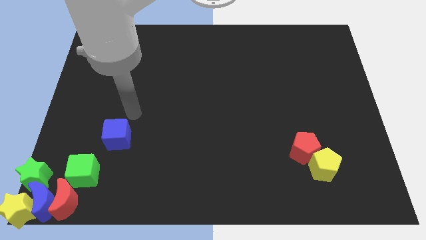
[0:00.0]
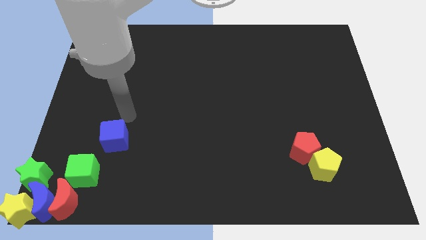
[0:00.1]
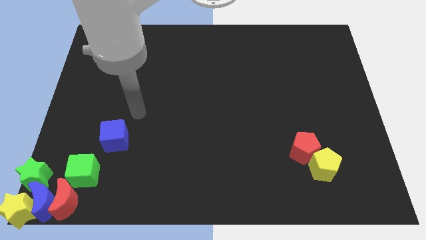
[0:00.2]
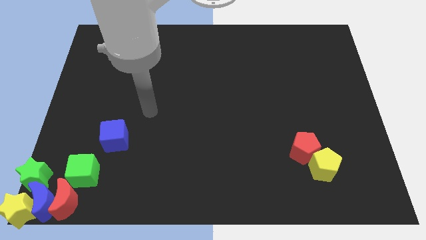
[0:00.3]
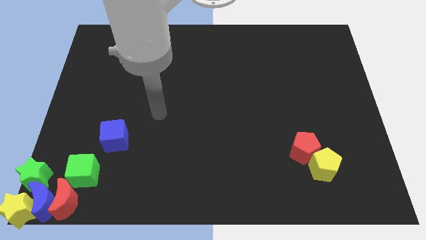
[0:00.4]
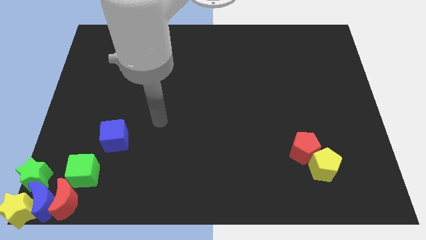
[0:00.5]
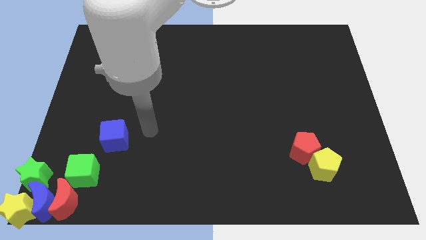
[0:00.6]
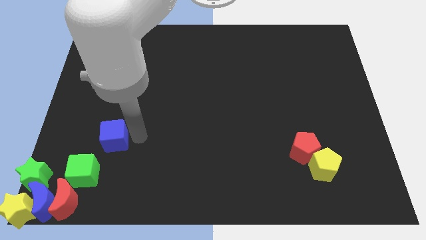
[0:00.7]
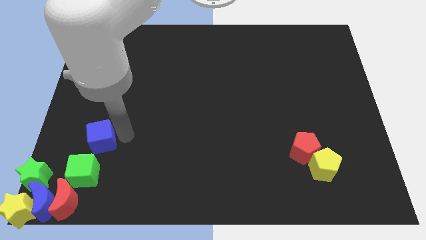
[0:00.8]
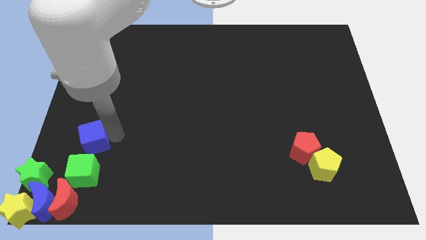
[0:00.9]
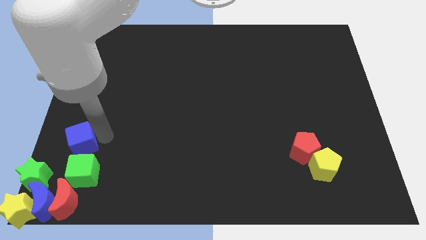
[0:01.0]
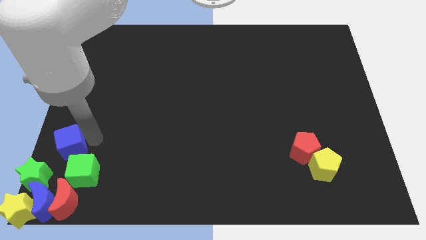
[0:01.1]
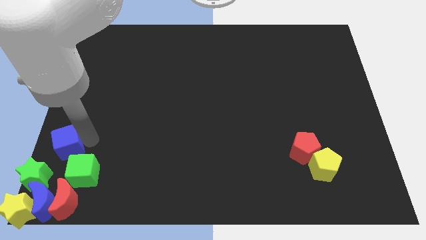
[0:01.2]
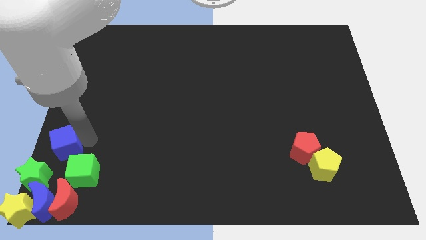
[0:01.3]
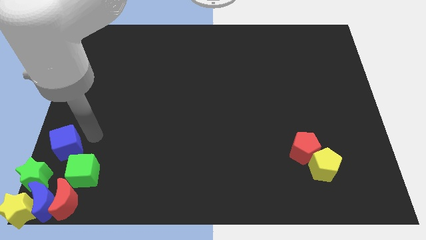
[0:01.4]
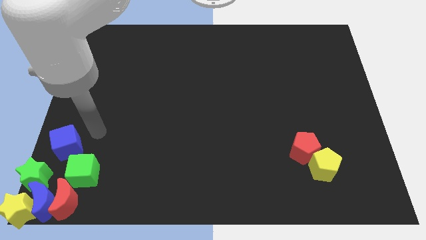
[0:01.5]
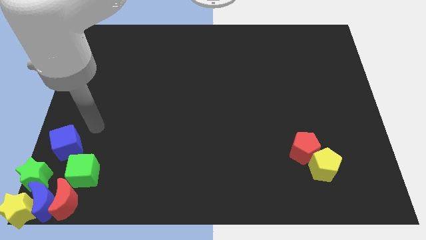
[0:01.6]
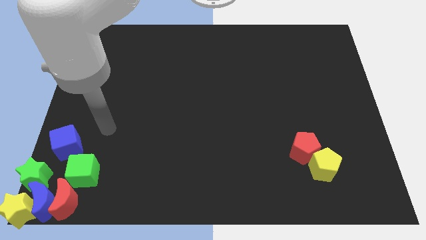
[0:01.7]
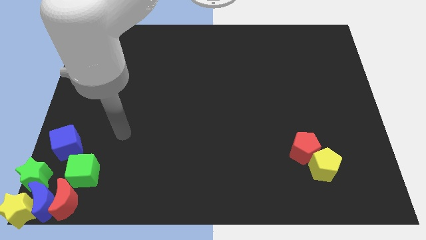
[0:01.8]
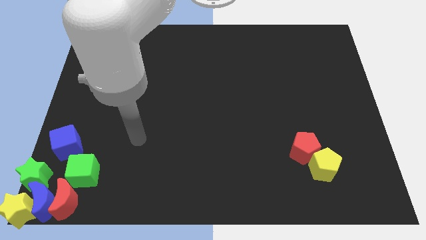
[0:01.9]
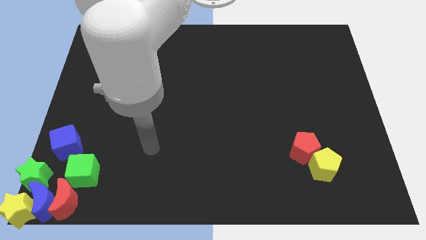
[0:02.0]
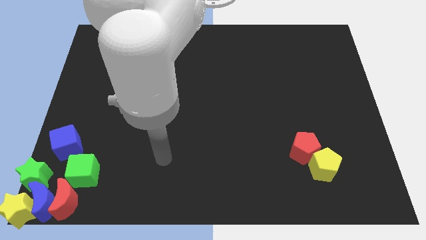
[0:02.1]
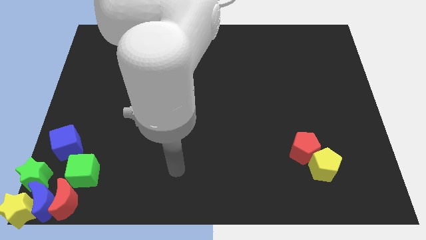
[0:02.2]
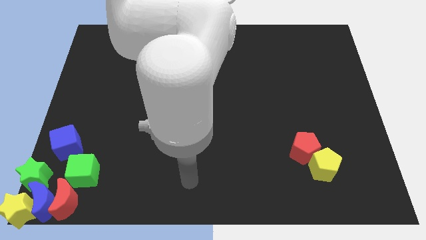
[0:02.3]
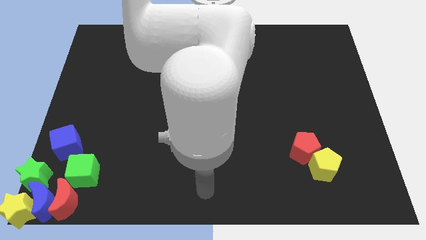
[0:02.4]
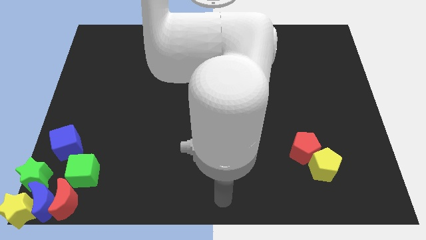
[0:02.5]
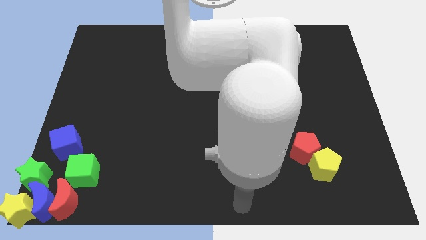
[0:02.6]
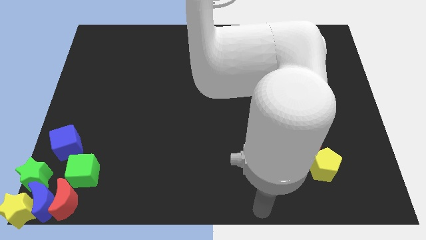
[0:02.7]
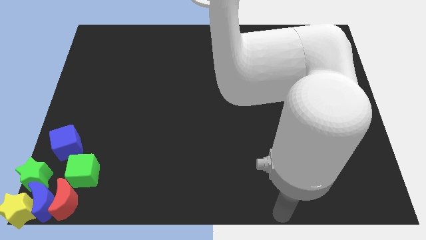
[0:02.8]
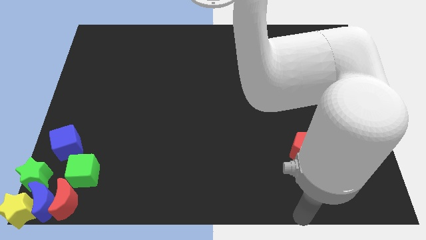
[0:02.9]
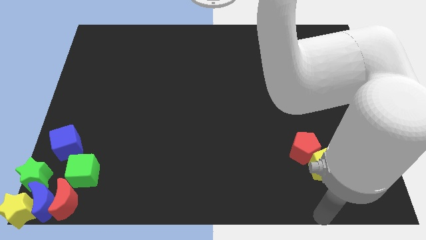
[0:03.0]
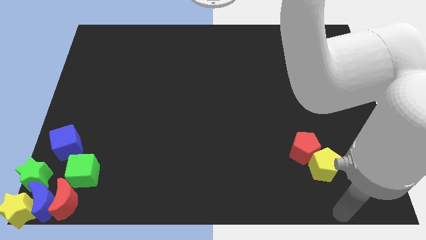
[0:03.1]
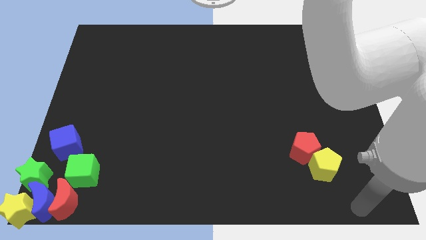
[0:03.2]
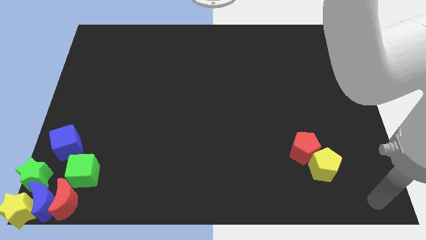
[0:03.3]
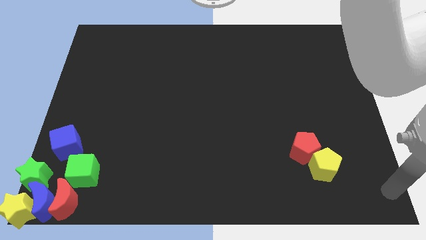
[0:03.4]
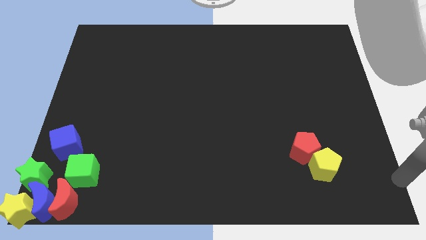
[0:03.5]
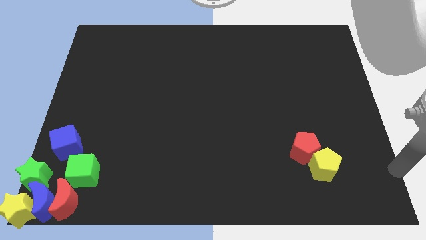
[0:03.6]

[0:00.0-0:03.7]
slide the blue cube to the top left side of the blue cube

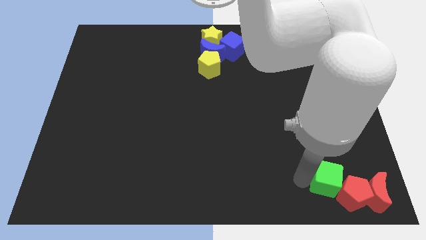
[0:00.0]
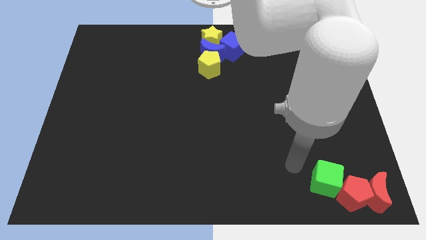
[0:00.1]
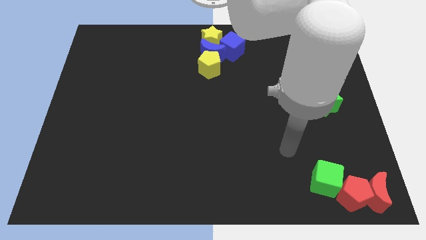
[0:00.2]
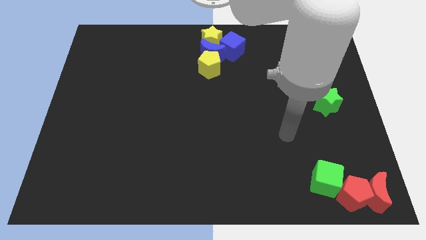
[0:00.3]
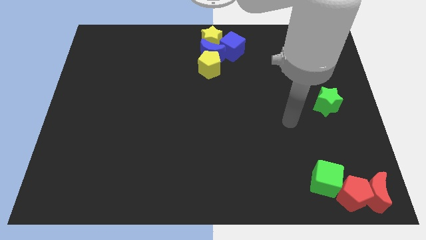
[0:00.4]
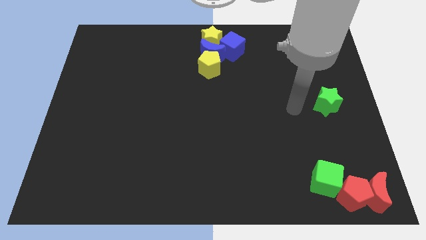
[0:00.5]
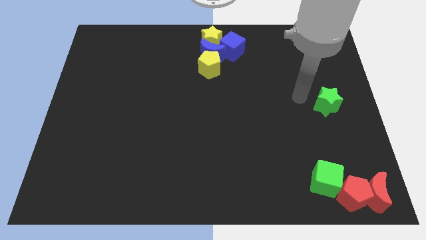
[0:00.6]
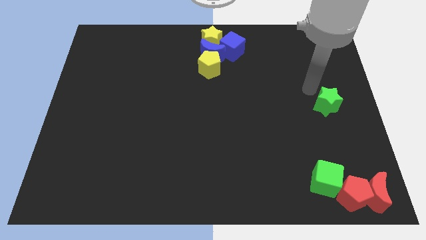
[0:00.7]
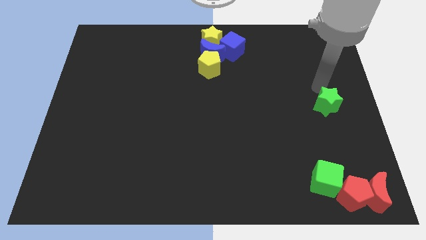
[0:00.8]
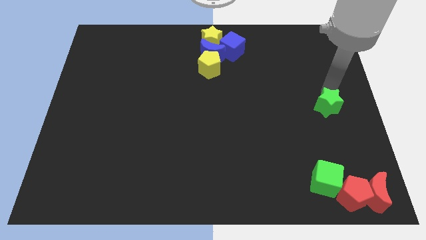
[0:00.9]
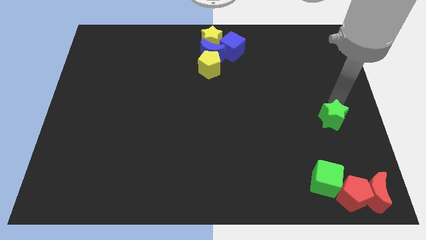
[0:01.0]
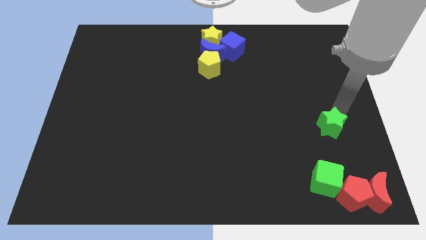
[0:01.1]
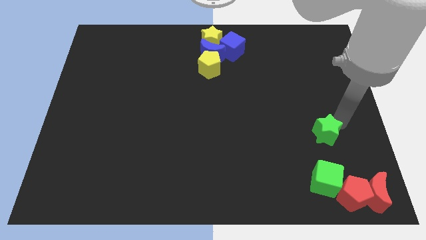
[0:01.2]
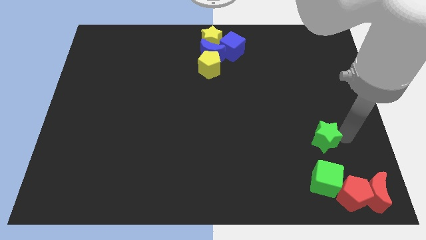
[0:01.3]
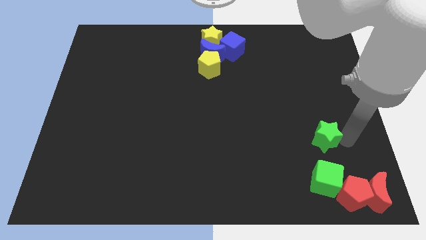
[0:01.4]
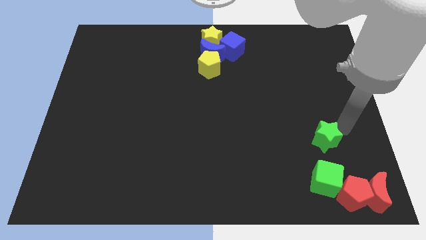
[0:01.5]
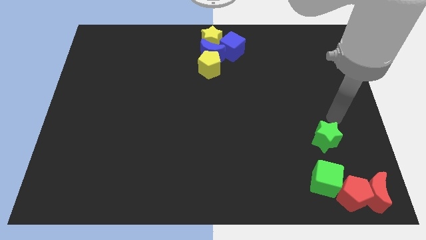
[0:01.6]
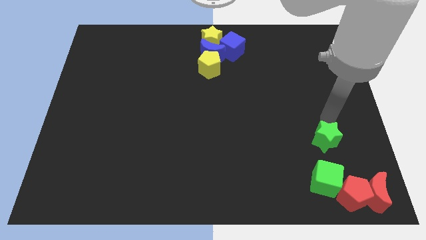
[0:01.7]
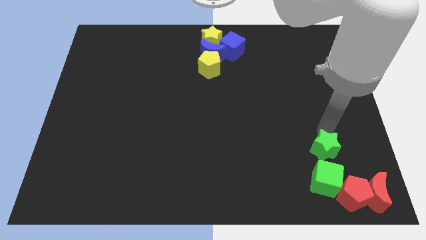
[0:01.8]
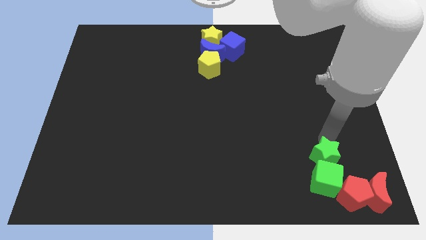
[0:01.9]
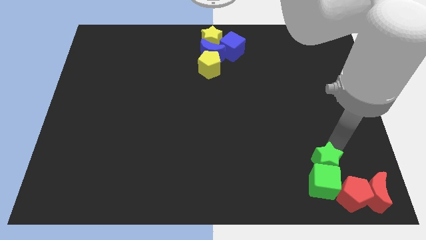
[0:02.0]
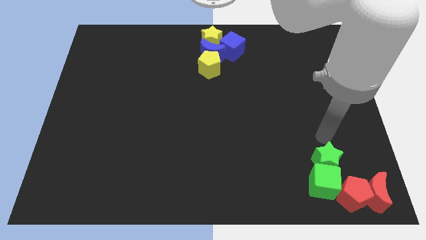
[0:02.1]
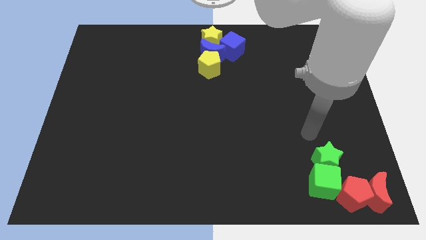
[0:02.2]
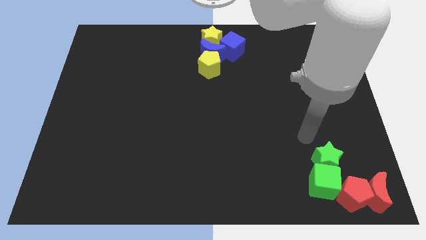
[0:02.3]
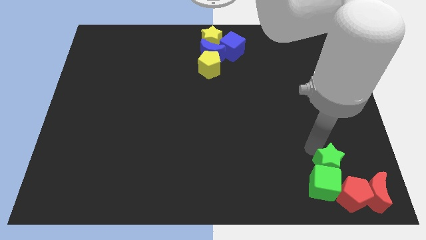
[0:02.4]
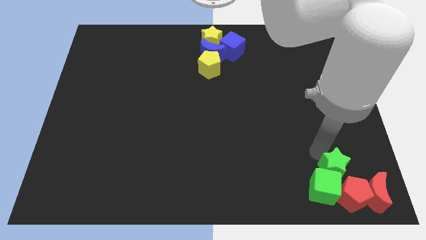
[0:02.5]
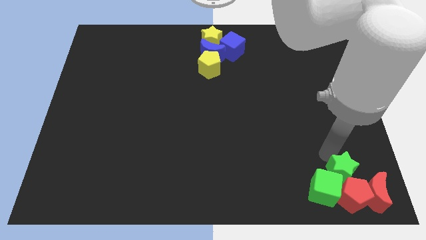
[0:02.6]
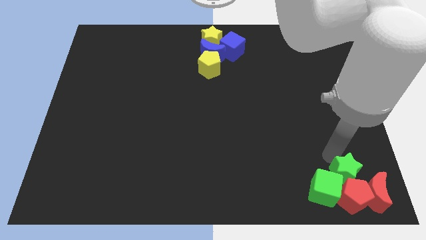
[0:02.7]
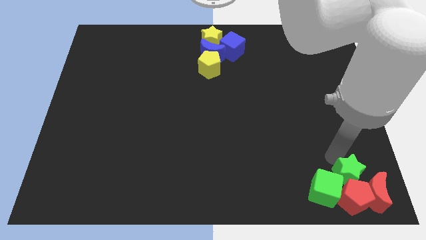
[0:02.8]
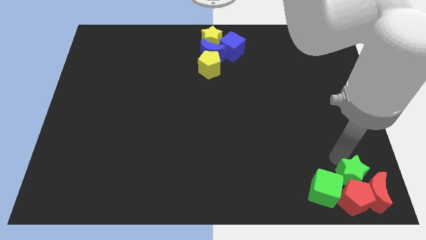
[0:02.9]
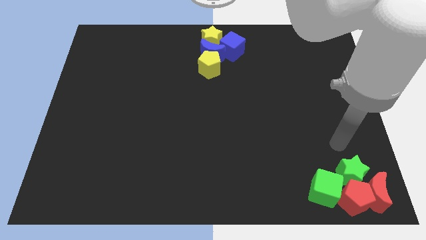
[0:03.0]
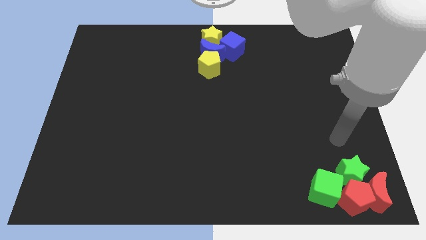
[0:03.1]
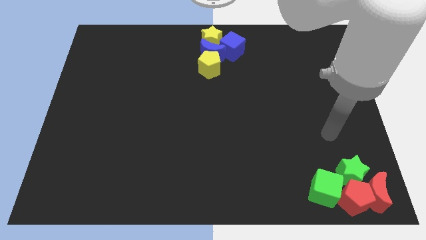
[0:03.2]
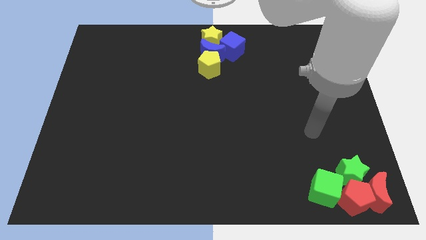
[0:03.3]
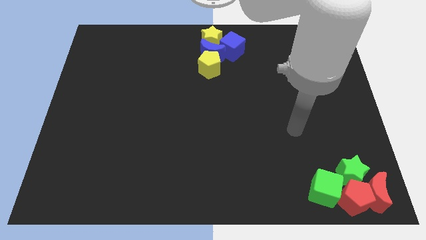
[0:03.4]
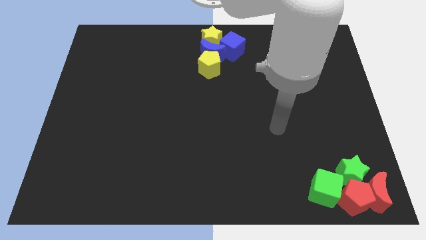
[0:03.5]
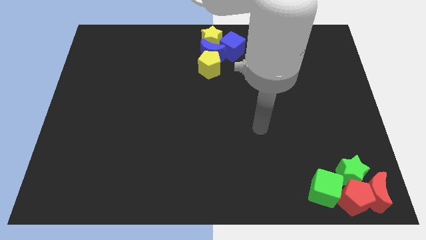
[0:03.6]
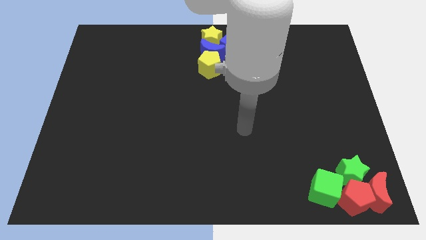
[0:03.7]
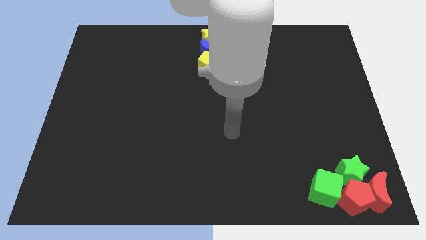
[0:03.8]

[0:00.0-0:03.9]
slide the green star into the group of blocks

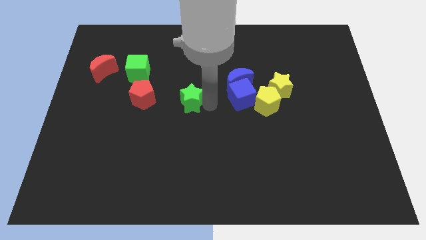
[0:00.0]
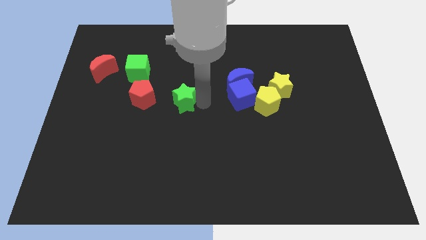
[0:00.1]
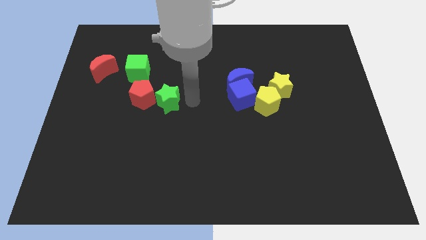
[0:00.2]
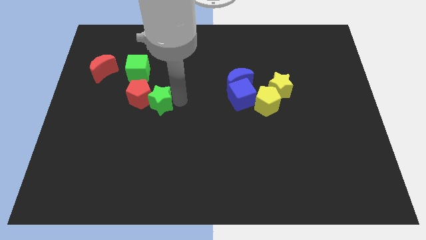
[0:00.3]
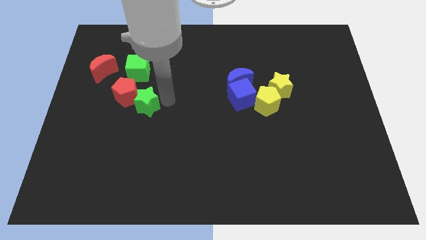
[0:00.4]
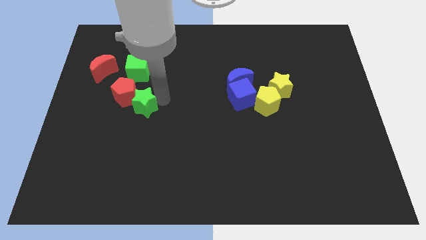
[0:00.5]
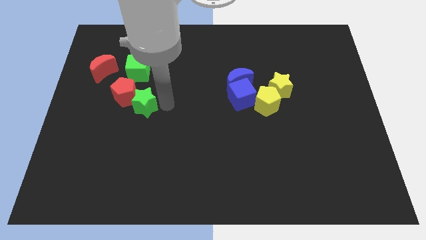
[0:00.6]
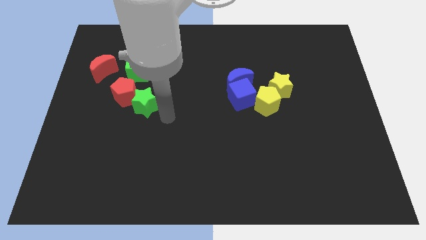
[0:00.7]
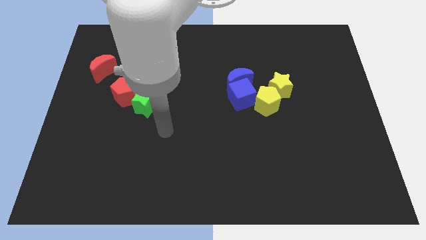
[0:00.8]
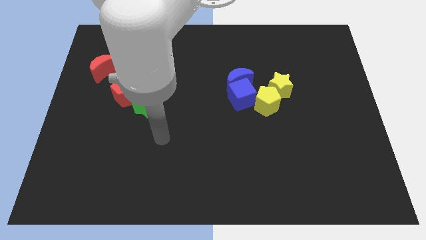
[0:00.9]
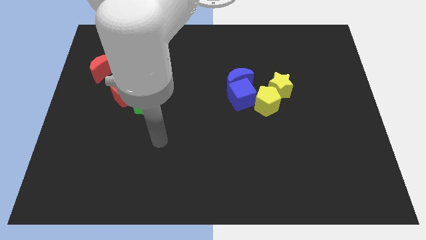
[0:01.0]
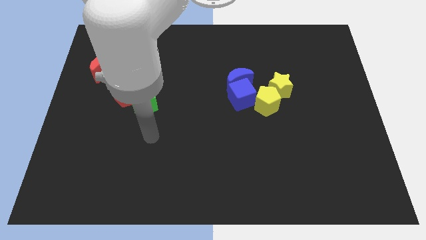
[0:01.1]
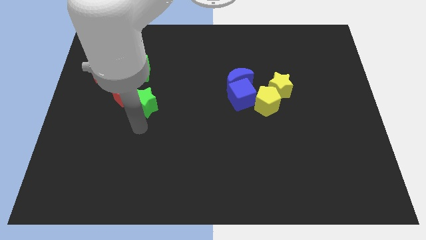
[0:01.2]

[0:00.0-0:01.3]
push the green star into the red pentagon

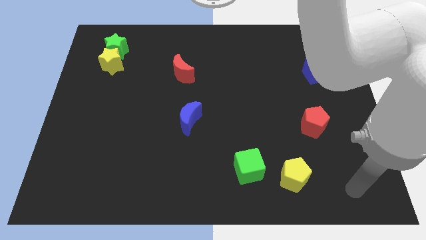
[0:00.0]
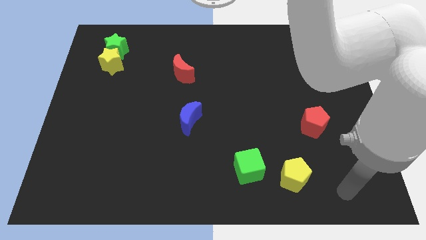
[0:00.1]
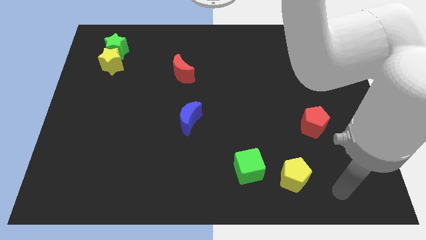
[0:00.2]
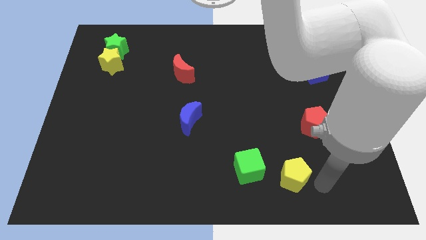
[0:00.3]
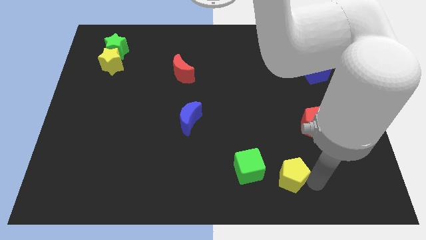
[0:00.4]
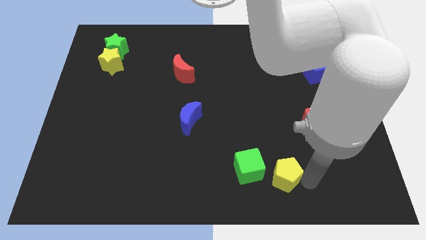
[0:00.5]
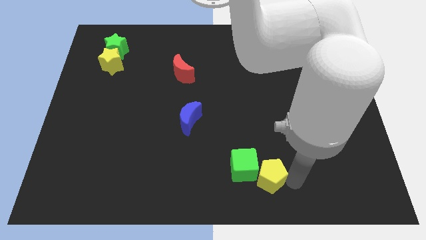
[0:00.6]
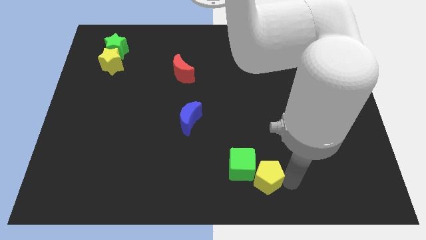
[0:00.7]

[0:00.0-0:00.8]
push the yellow pentagon into the green cube
